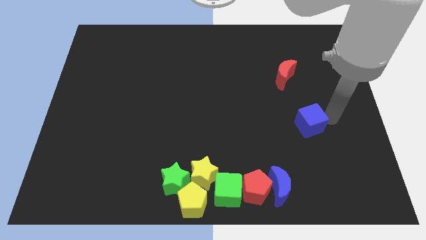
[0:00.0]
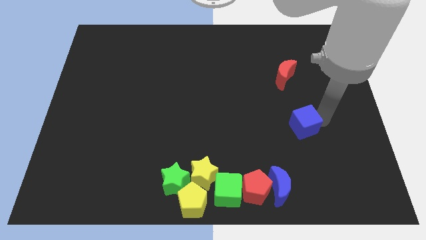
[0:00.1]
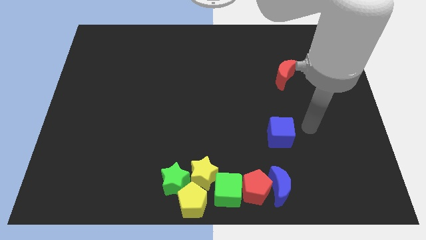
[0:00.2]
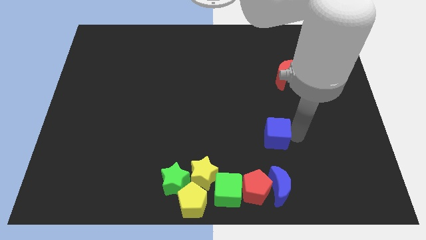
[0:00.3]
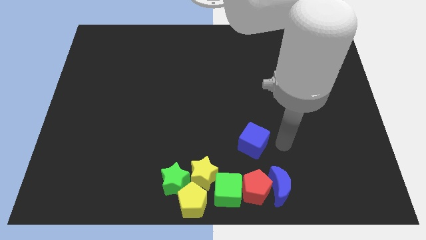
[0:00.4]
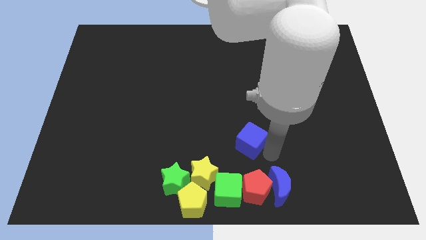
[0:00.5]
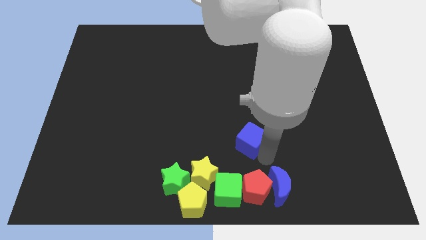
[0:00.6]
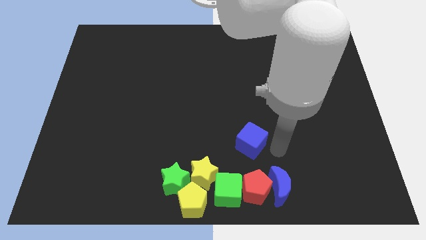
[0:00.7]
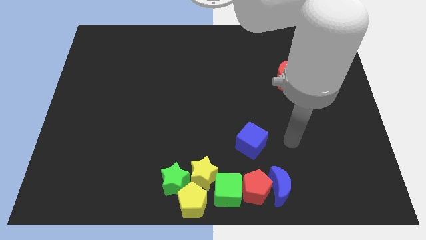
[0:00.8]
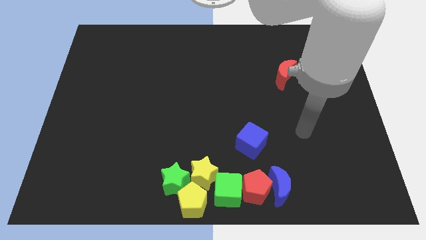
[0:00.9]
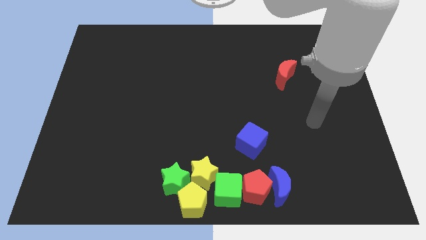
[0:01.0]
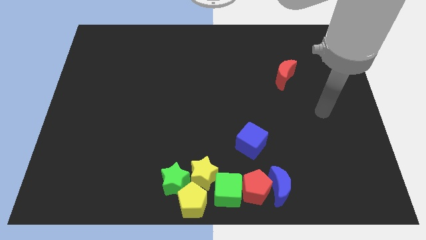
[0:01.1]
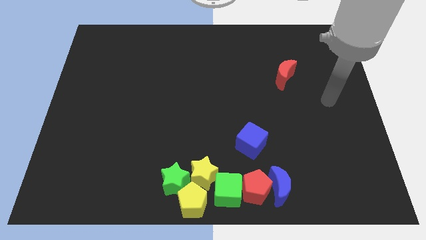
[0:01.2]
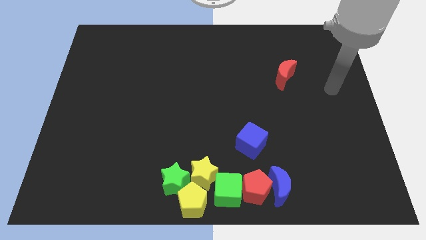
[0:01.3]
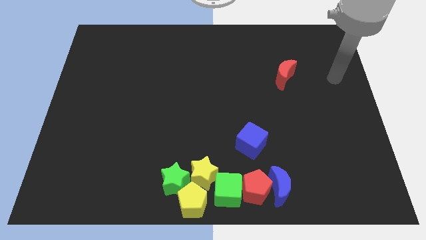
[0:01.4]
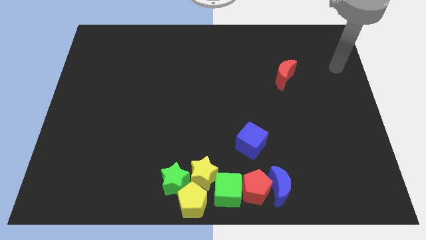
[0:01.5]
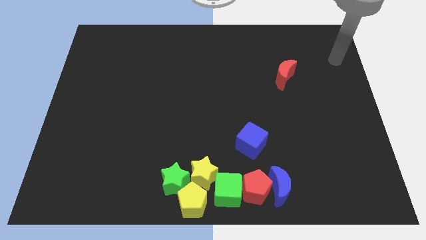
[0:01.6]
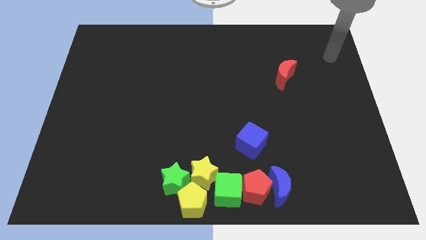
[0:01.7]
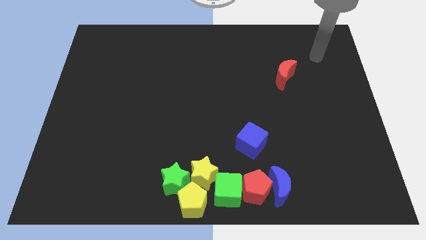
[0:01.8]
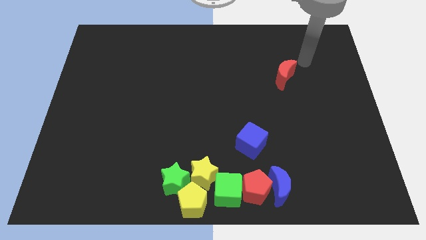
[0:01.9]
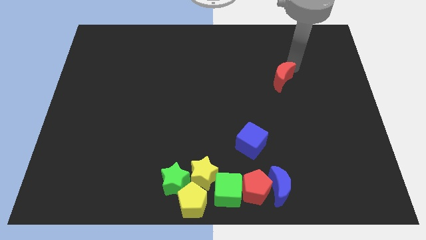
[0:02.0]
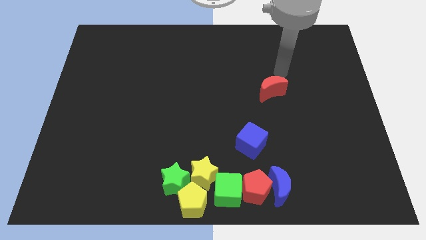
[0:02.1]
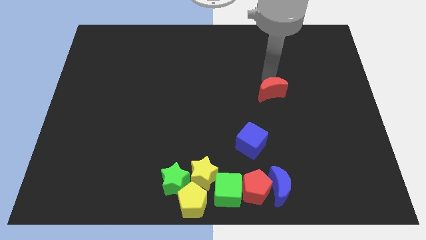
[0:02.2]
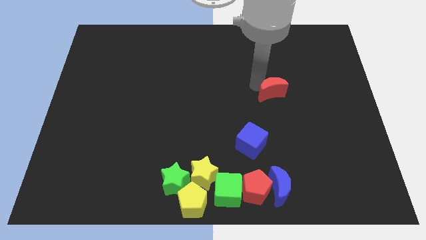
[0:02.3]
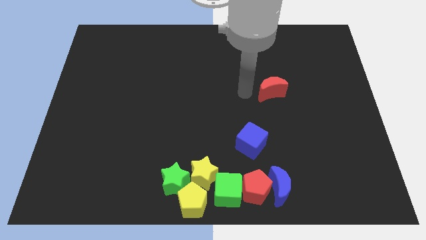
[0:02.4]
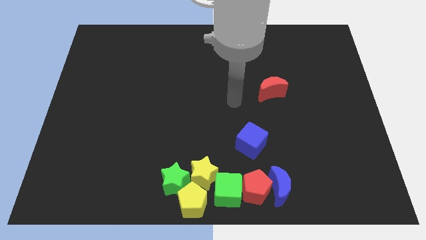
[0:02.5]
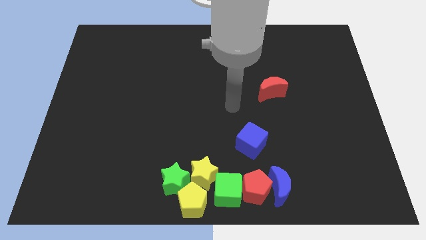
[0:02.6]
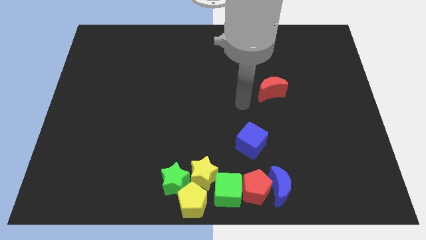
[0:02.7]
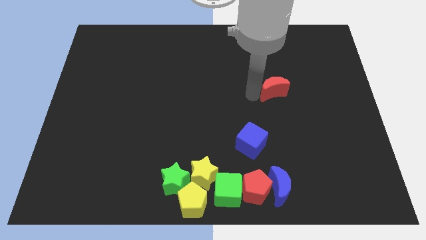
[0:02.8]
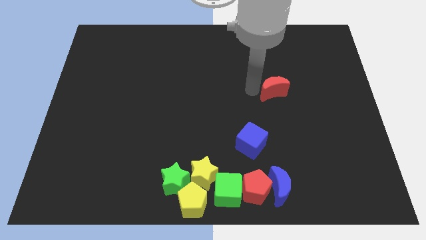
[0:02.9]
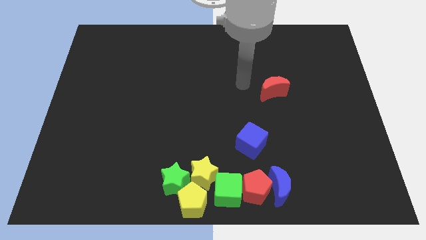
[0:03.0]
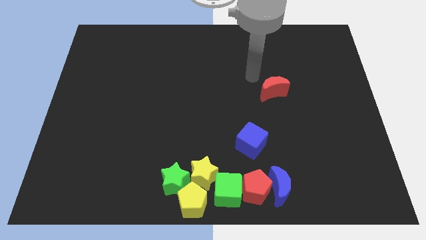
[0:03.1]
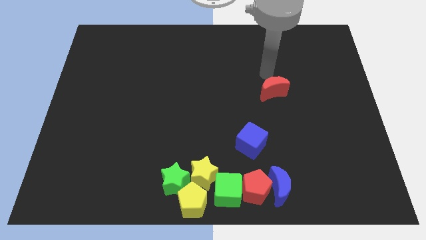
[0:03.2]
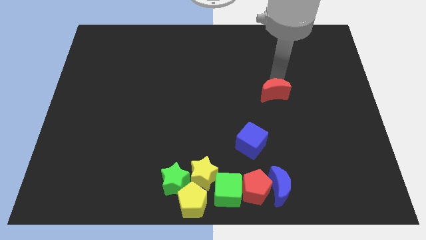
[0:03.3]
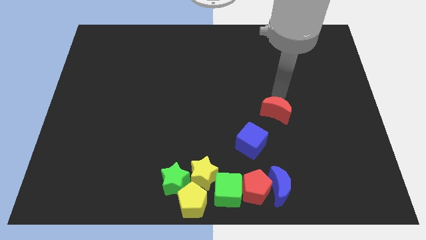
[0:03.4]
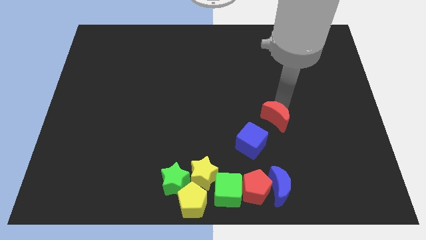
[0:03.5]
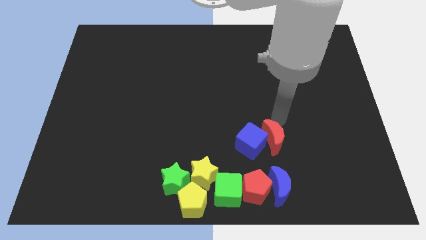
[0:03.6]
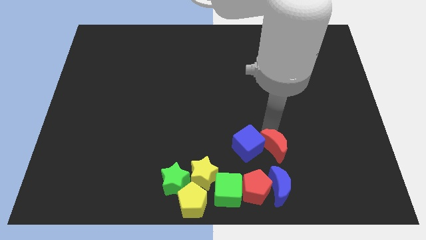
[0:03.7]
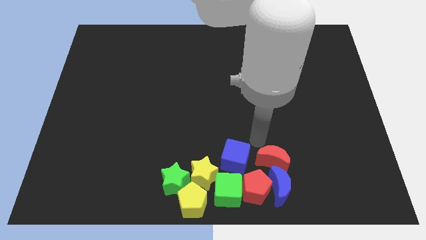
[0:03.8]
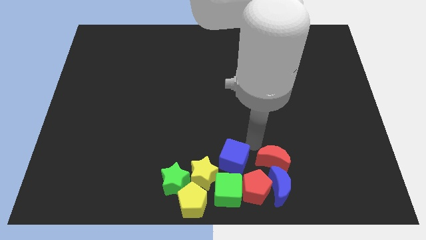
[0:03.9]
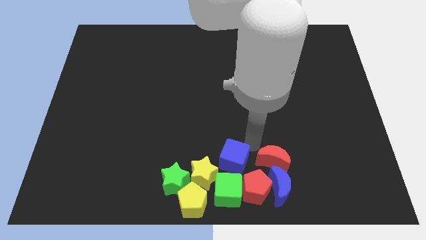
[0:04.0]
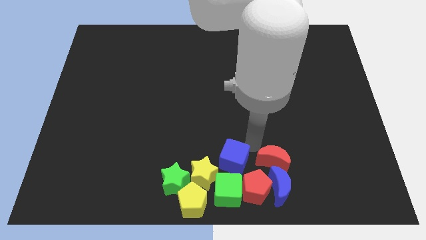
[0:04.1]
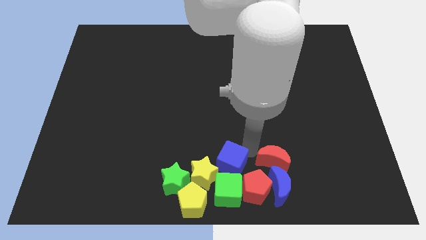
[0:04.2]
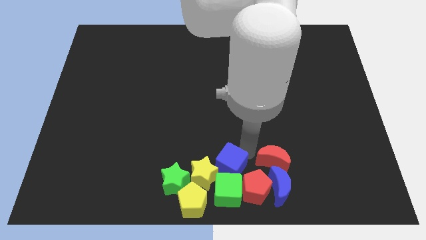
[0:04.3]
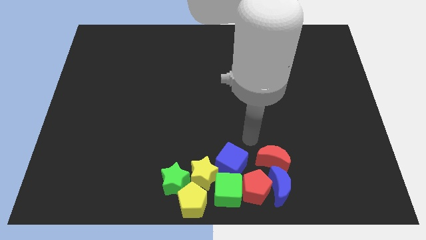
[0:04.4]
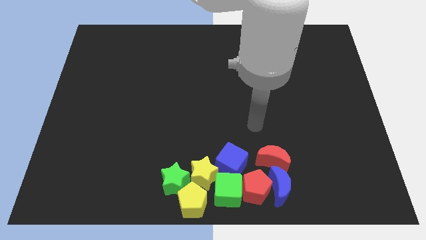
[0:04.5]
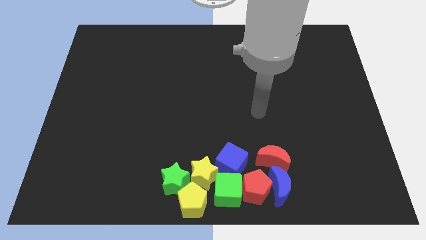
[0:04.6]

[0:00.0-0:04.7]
push the blue cube into the green cube

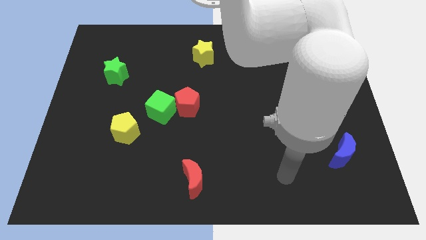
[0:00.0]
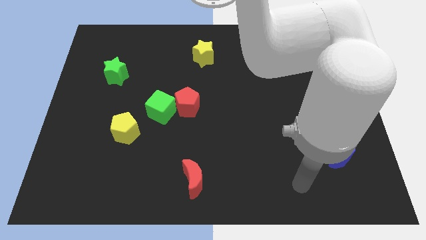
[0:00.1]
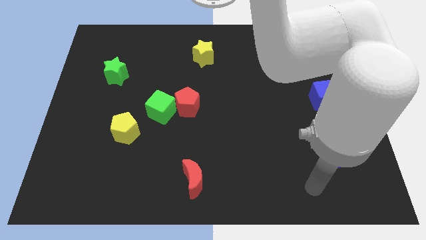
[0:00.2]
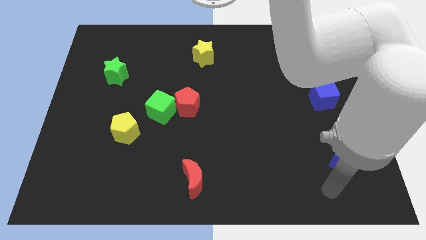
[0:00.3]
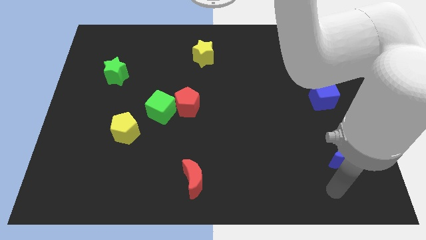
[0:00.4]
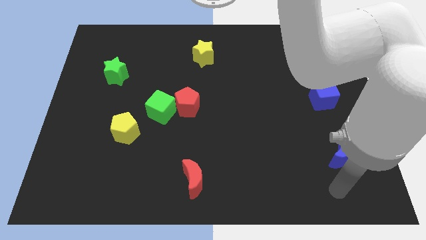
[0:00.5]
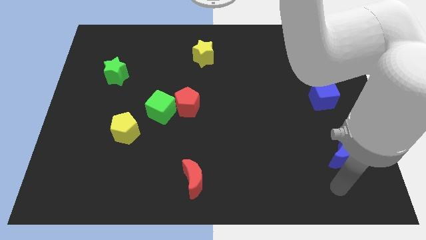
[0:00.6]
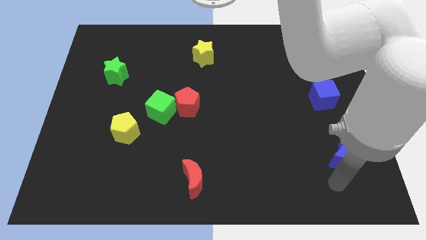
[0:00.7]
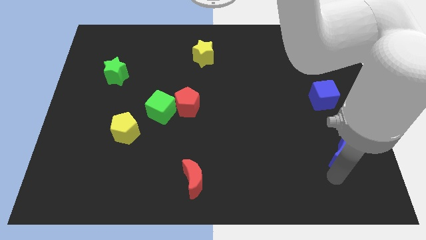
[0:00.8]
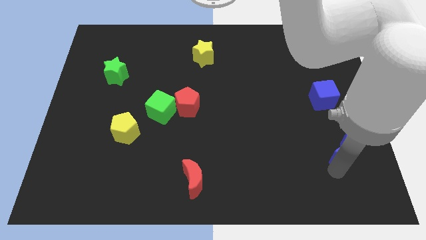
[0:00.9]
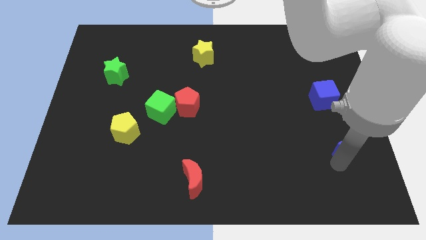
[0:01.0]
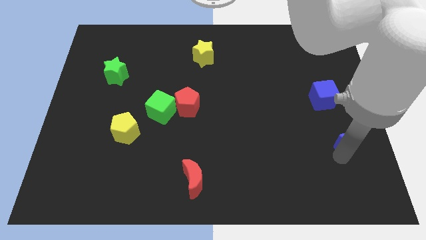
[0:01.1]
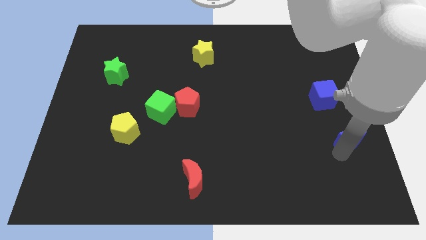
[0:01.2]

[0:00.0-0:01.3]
move the blue moon towards the blue cube

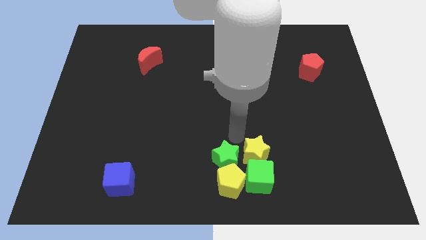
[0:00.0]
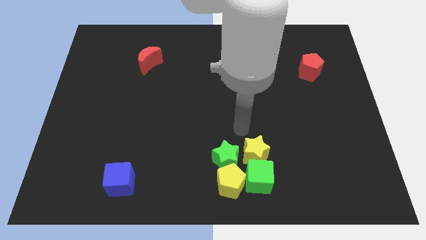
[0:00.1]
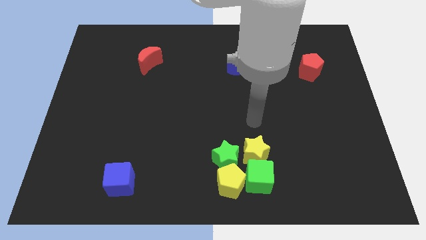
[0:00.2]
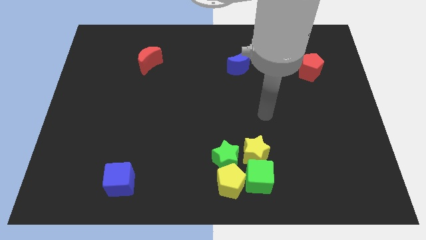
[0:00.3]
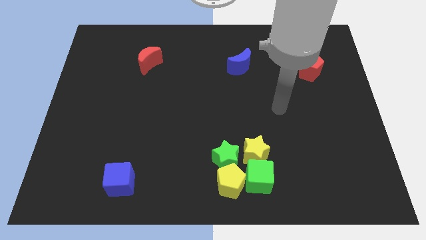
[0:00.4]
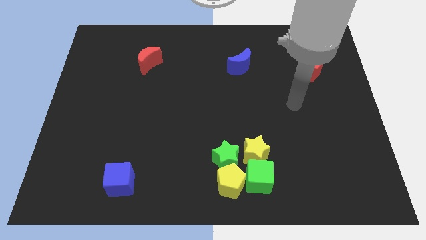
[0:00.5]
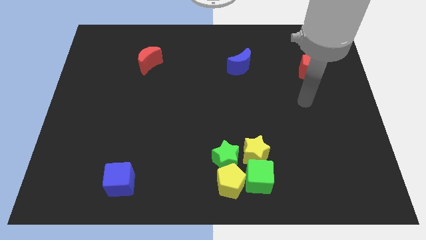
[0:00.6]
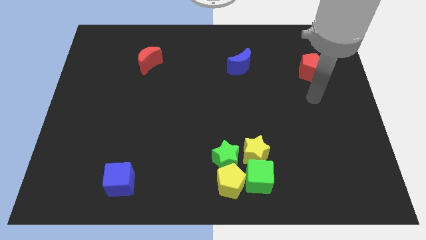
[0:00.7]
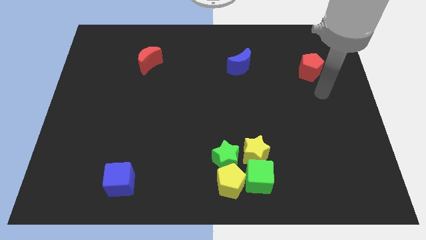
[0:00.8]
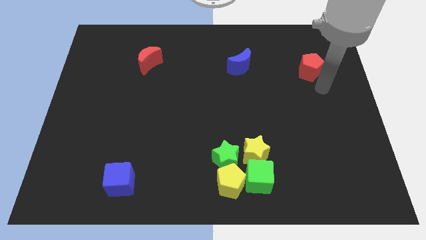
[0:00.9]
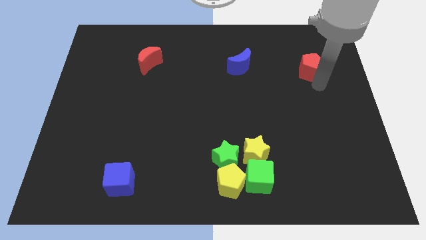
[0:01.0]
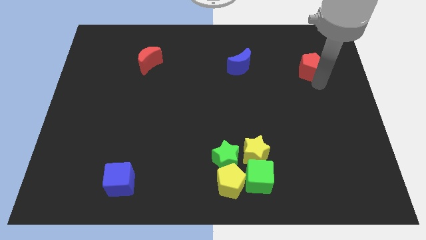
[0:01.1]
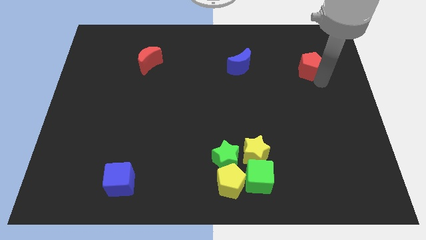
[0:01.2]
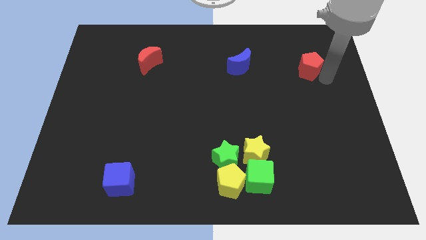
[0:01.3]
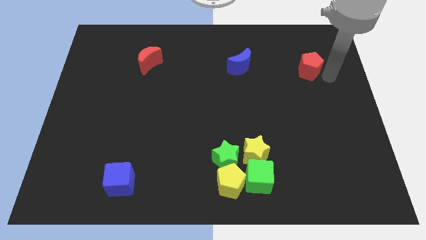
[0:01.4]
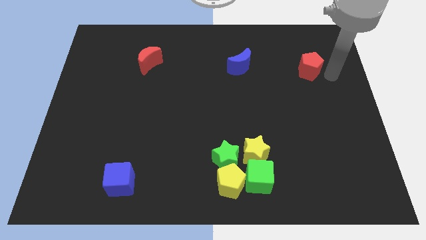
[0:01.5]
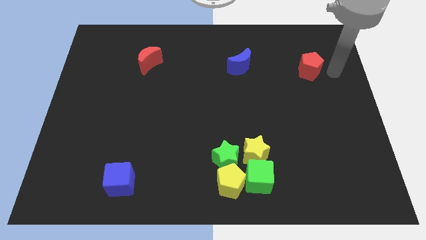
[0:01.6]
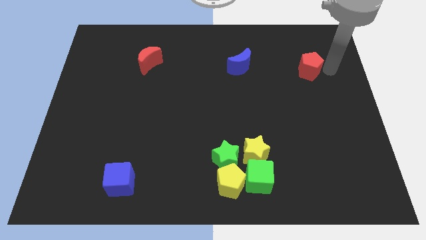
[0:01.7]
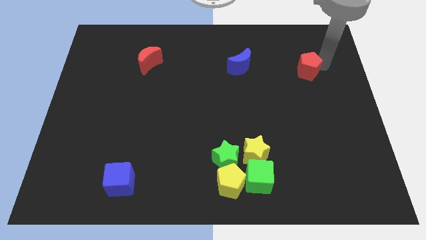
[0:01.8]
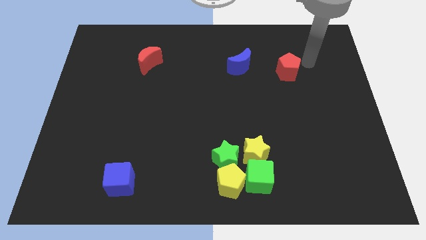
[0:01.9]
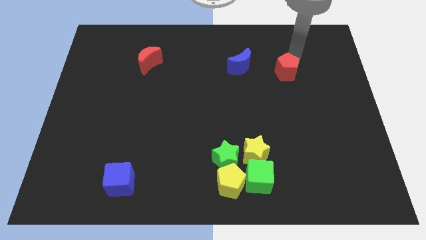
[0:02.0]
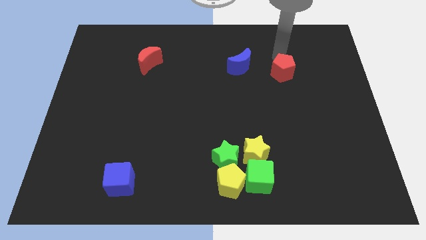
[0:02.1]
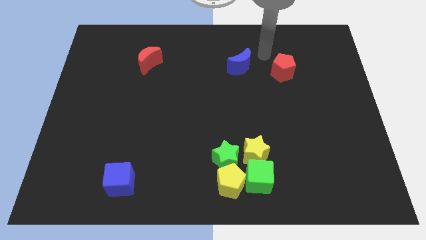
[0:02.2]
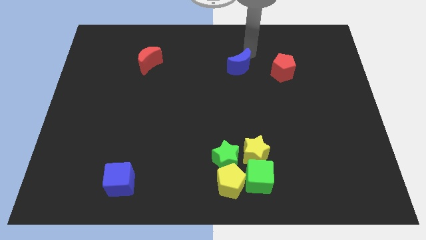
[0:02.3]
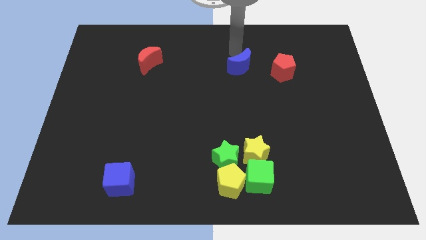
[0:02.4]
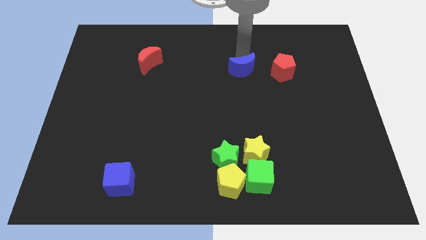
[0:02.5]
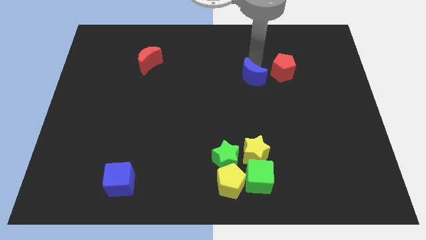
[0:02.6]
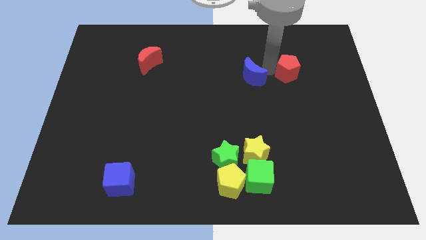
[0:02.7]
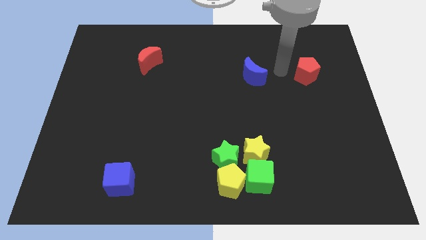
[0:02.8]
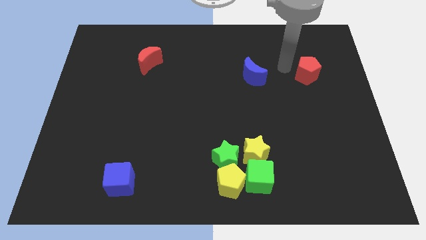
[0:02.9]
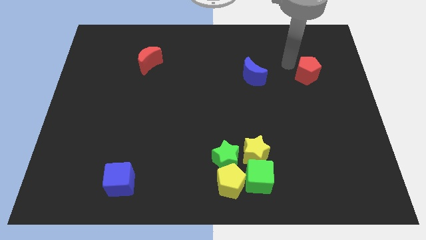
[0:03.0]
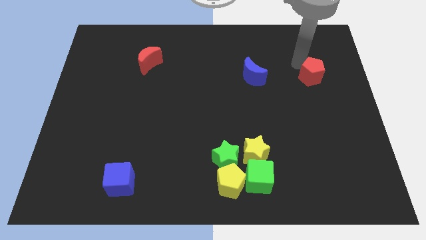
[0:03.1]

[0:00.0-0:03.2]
adjust the red pentagon and blue crescent horizontal to each other
